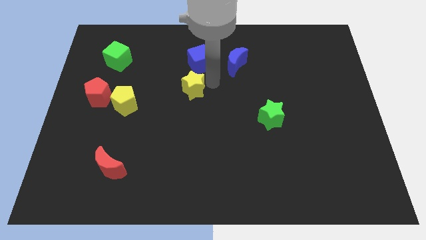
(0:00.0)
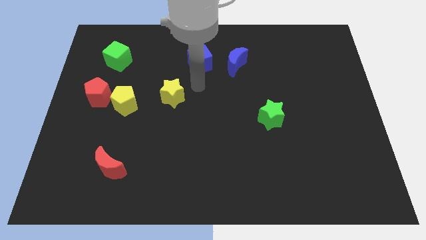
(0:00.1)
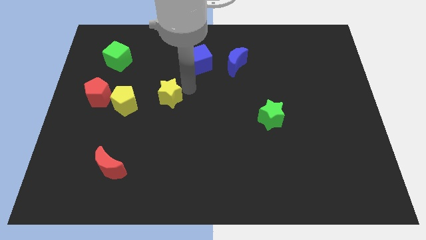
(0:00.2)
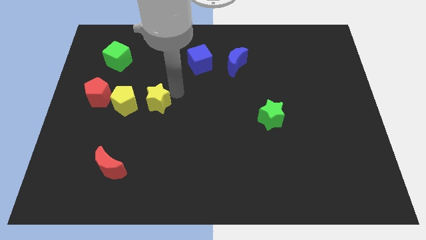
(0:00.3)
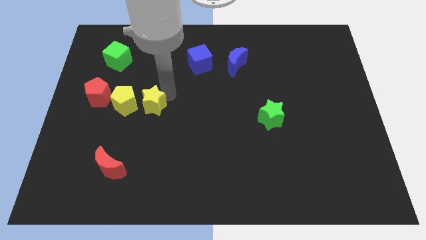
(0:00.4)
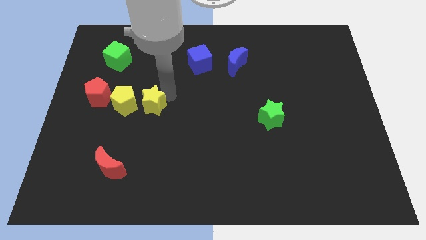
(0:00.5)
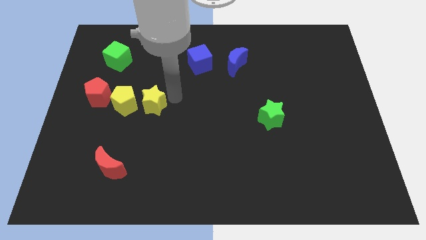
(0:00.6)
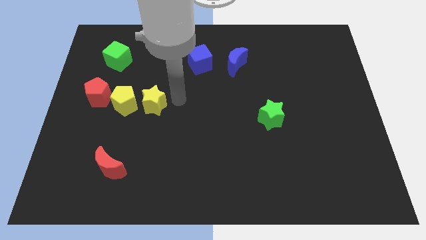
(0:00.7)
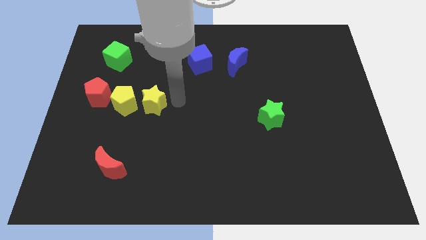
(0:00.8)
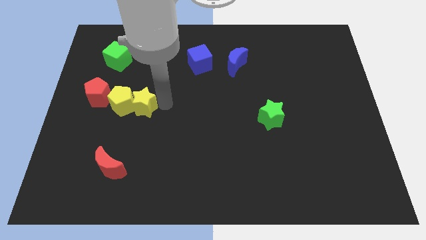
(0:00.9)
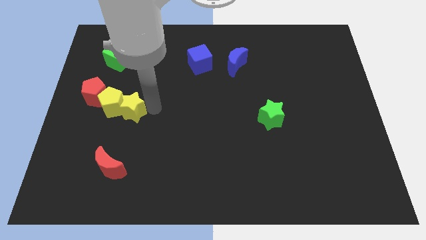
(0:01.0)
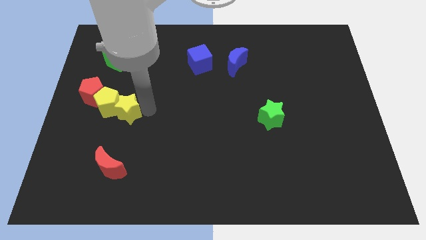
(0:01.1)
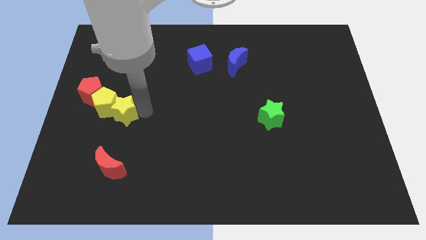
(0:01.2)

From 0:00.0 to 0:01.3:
push the yellow star into the yellow pentagon

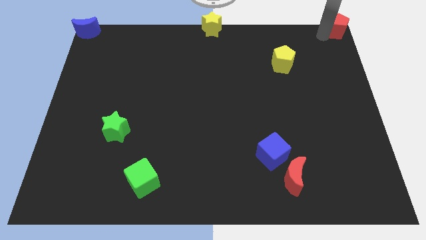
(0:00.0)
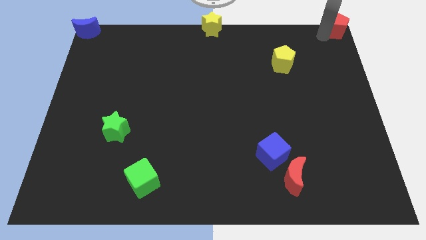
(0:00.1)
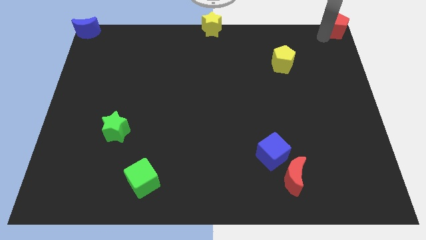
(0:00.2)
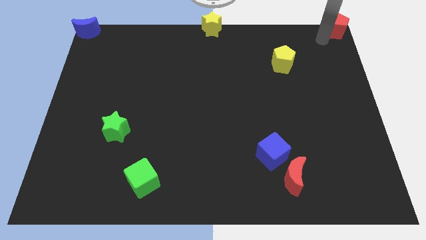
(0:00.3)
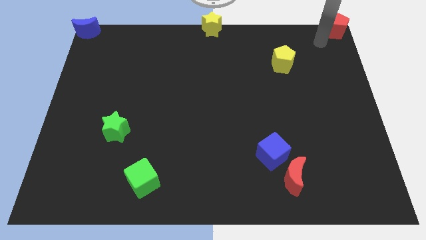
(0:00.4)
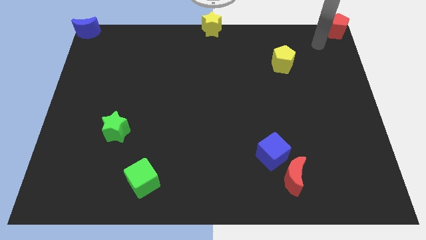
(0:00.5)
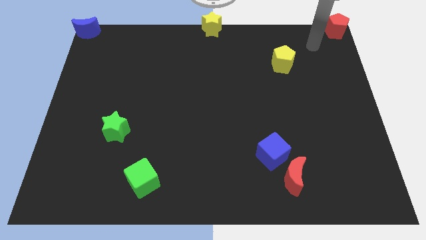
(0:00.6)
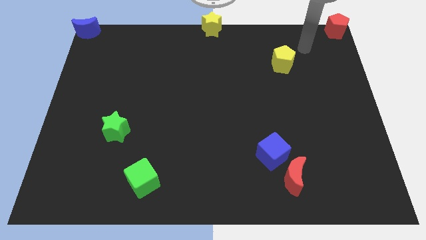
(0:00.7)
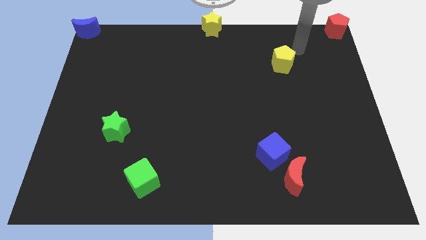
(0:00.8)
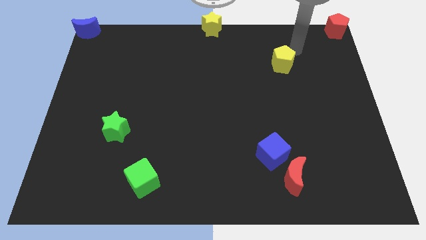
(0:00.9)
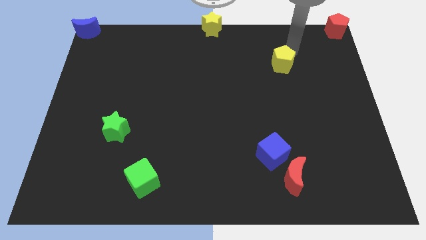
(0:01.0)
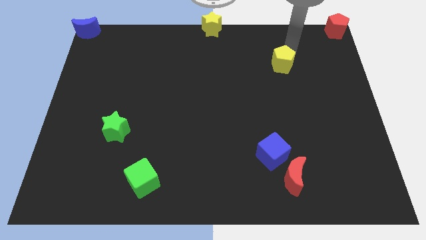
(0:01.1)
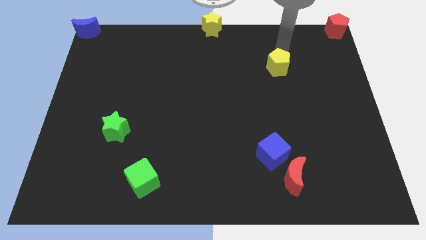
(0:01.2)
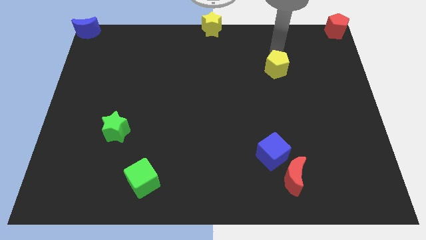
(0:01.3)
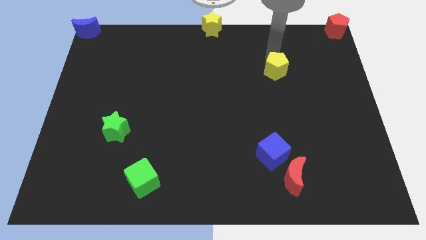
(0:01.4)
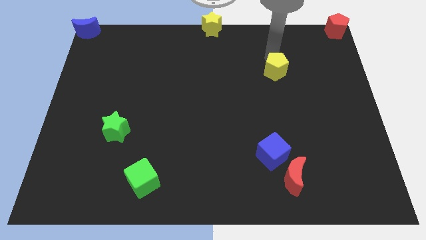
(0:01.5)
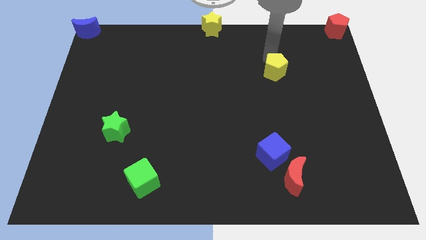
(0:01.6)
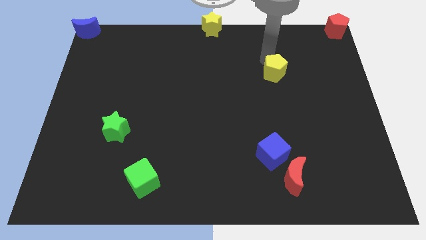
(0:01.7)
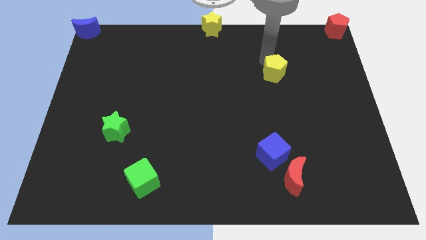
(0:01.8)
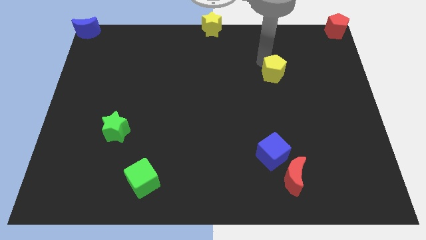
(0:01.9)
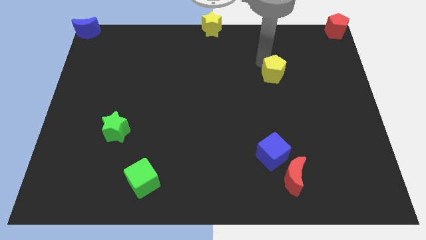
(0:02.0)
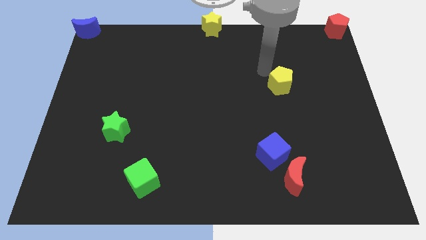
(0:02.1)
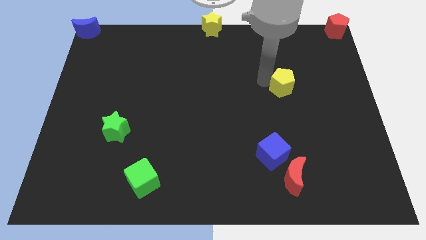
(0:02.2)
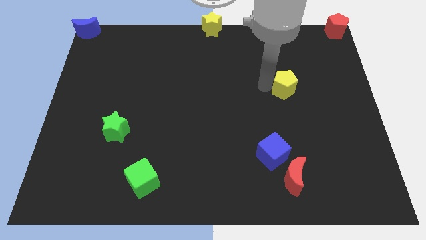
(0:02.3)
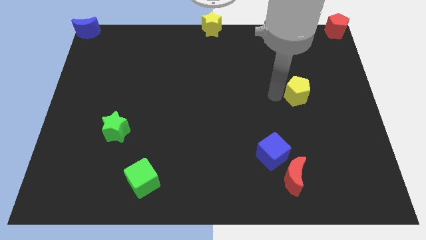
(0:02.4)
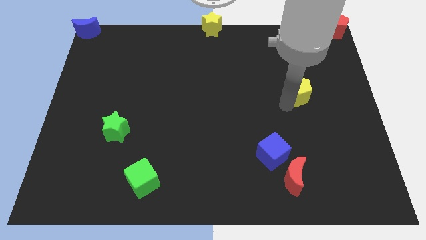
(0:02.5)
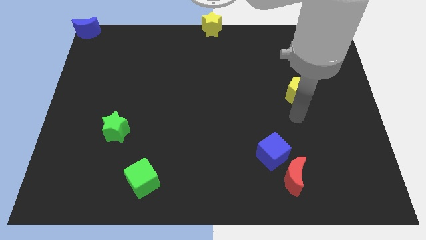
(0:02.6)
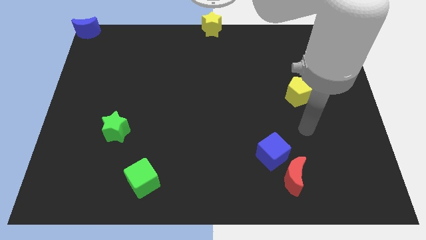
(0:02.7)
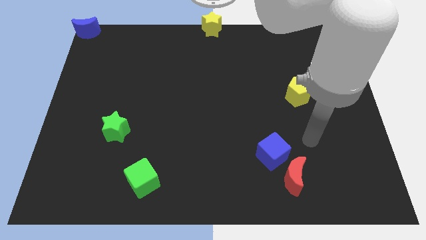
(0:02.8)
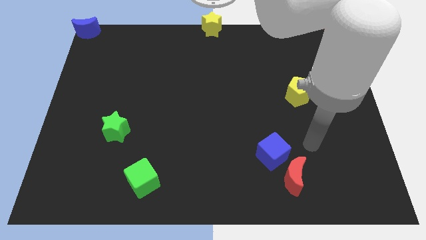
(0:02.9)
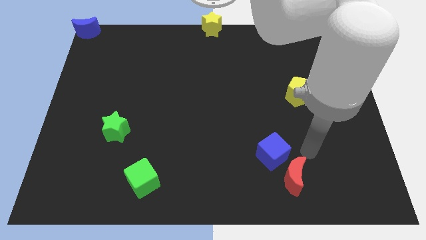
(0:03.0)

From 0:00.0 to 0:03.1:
slide yellow pentagon down to the top right of blue cube

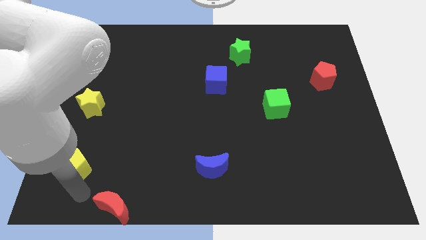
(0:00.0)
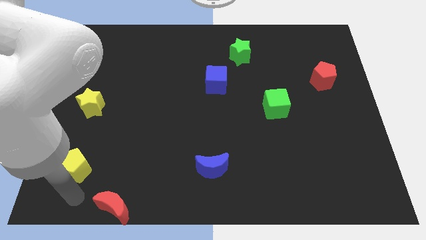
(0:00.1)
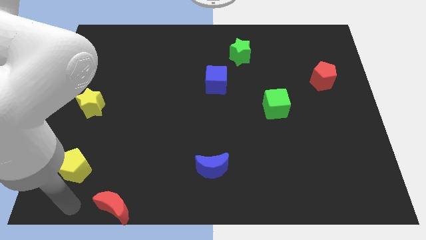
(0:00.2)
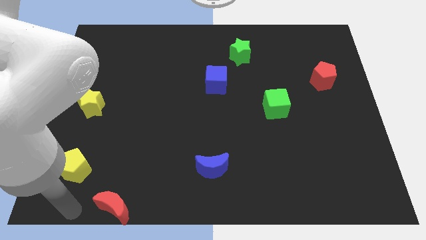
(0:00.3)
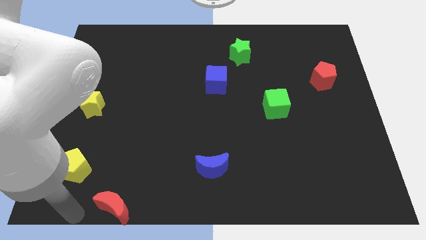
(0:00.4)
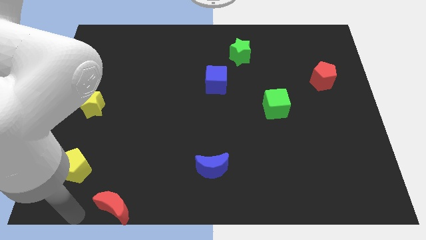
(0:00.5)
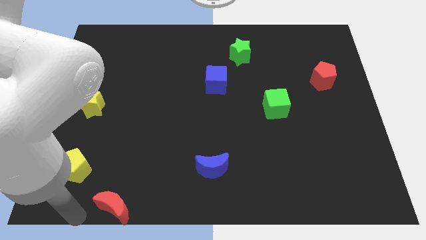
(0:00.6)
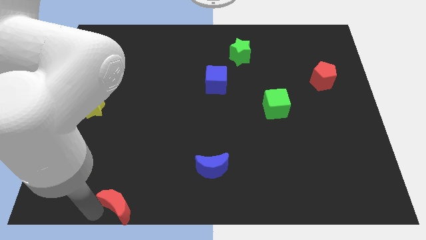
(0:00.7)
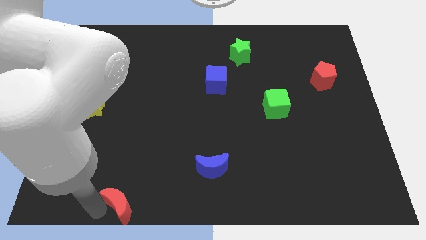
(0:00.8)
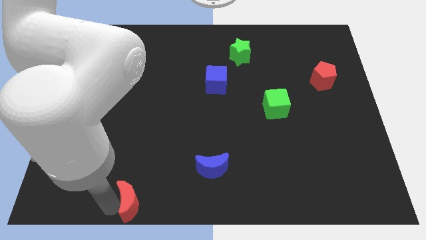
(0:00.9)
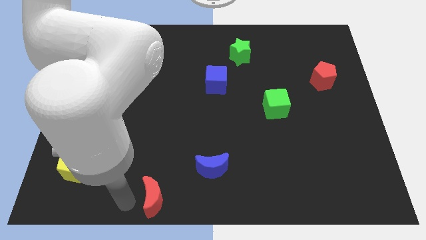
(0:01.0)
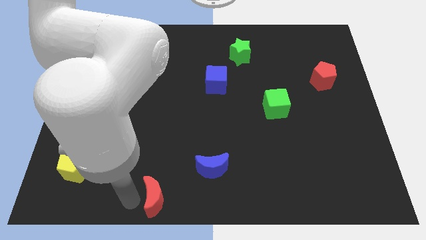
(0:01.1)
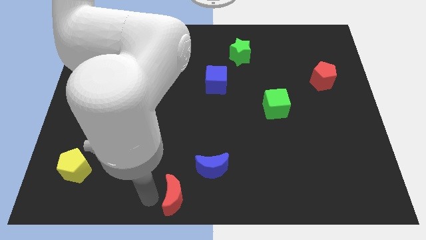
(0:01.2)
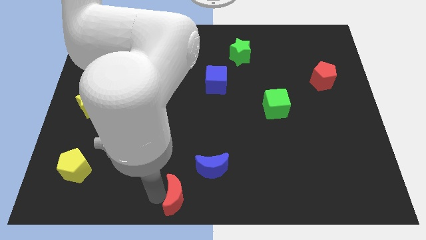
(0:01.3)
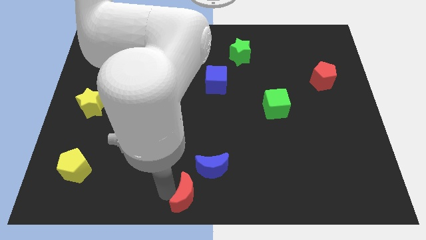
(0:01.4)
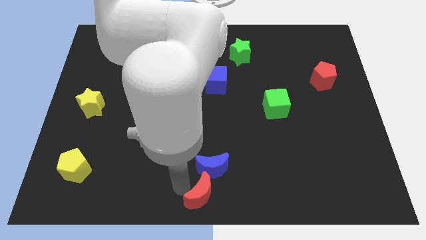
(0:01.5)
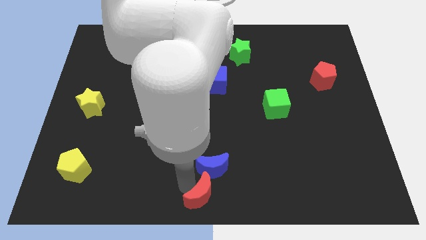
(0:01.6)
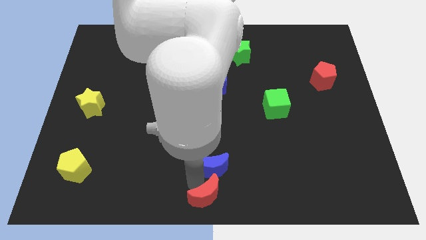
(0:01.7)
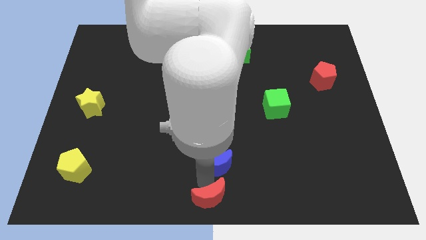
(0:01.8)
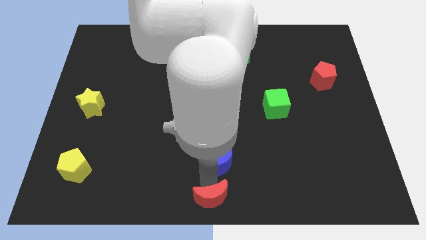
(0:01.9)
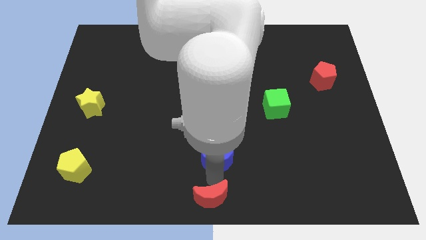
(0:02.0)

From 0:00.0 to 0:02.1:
move the red crescent to the bottom left of the board

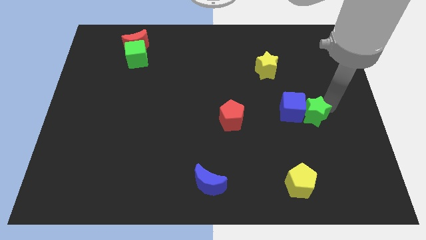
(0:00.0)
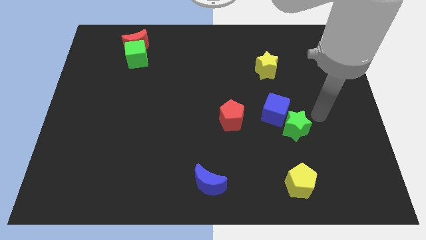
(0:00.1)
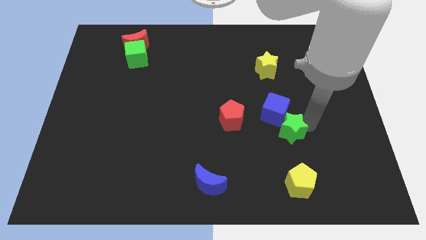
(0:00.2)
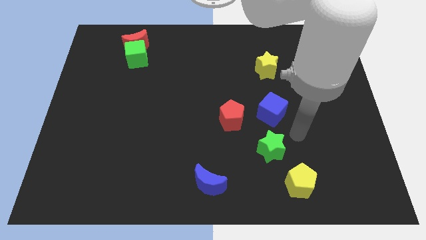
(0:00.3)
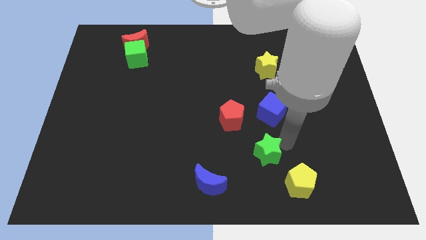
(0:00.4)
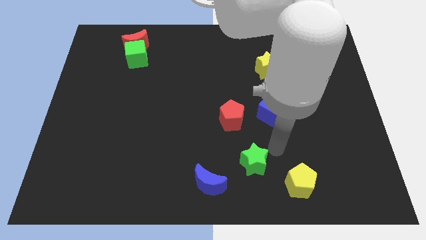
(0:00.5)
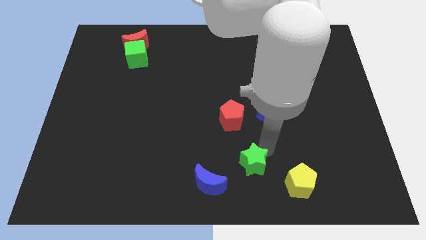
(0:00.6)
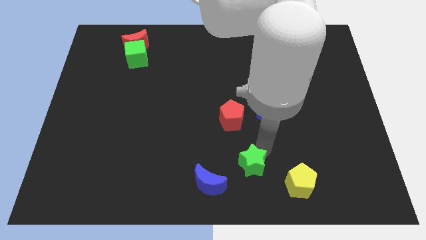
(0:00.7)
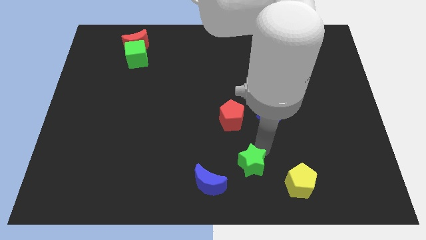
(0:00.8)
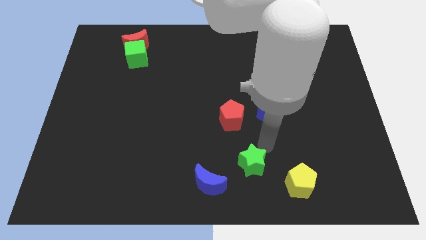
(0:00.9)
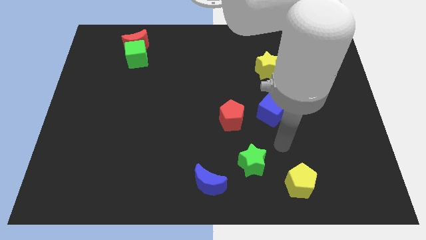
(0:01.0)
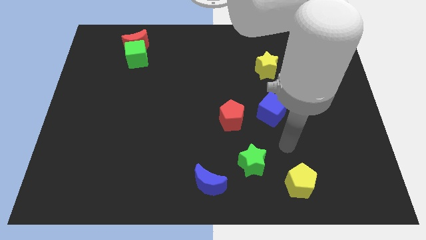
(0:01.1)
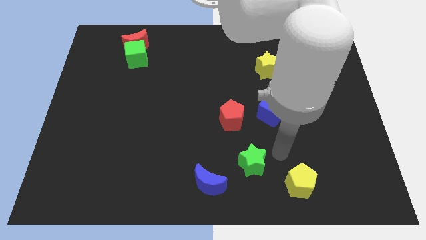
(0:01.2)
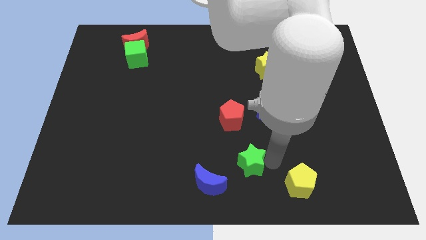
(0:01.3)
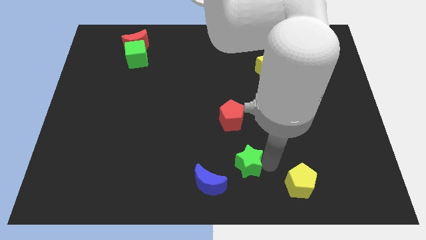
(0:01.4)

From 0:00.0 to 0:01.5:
separate green star from the blue cube

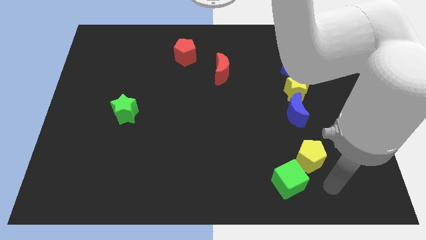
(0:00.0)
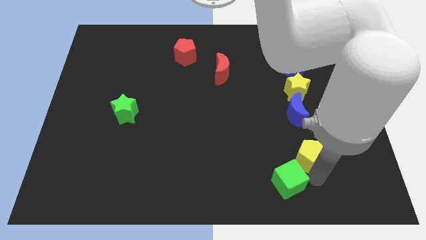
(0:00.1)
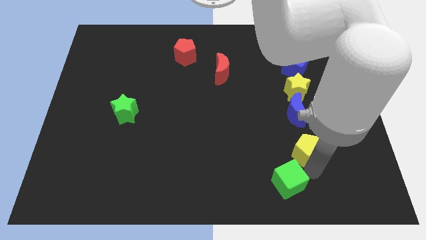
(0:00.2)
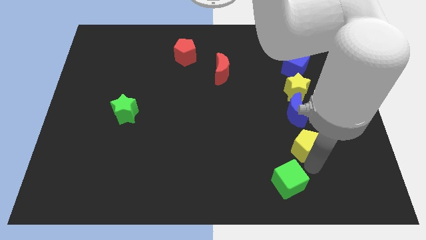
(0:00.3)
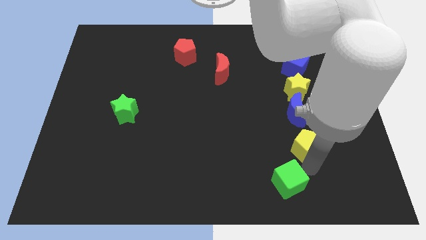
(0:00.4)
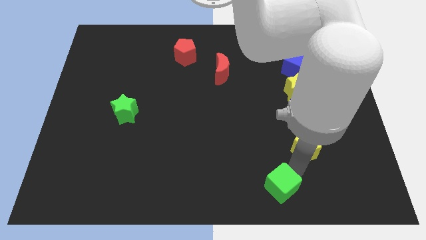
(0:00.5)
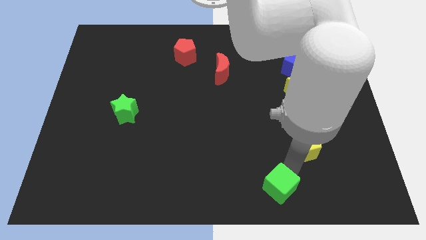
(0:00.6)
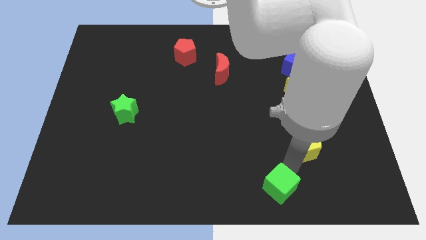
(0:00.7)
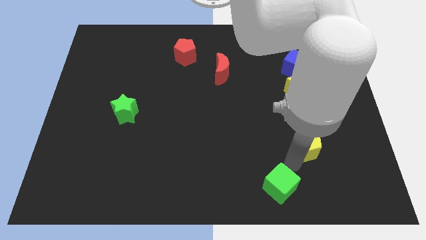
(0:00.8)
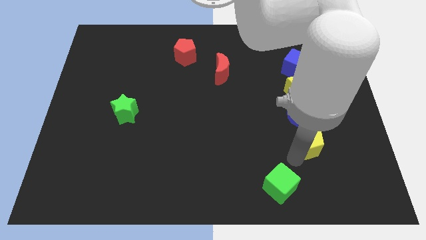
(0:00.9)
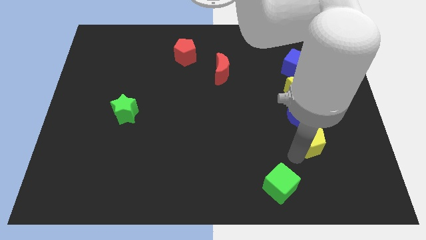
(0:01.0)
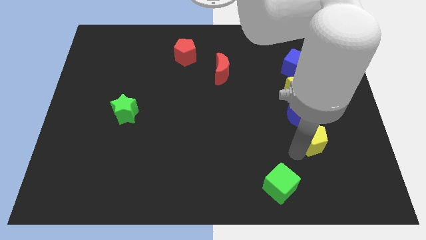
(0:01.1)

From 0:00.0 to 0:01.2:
place yellow pentagon below blue moon
